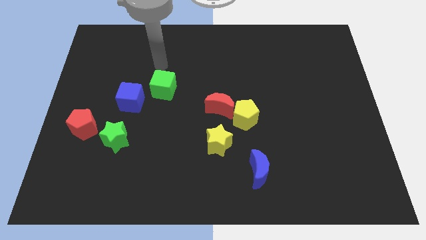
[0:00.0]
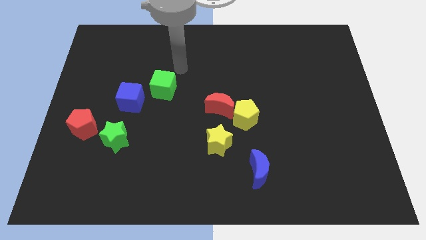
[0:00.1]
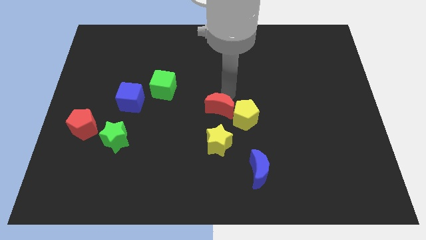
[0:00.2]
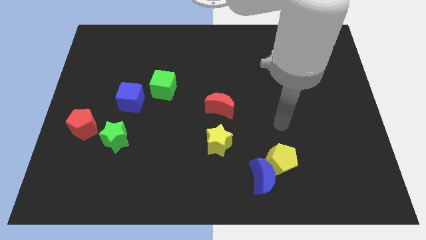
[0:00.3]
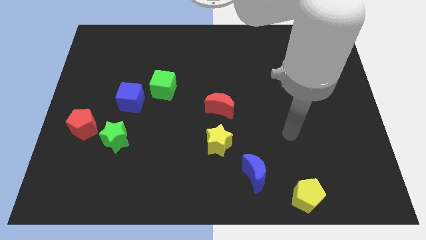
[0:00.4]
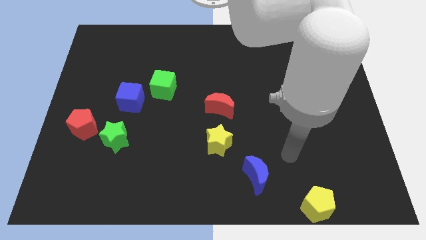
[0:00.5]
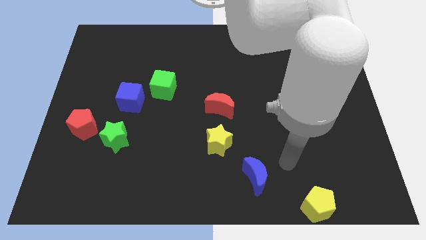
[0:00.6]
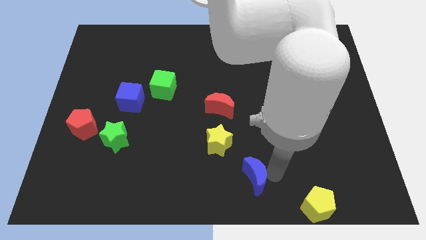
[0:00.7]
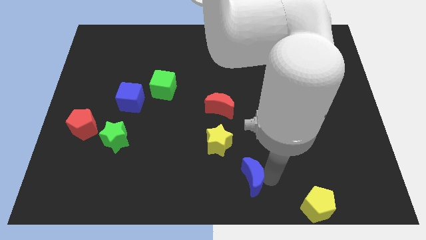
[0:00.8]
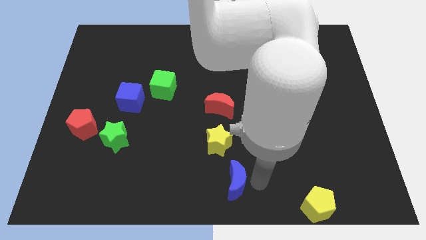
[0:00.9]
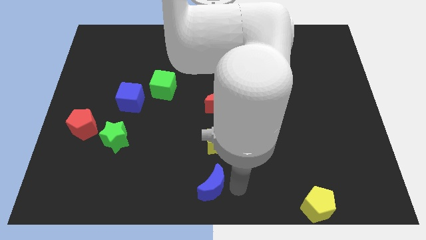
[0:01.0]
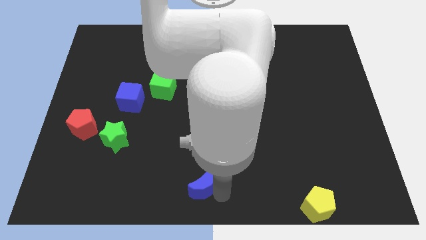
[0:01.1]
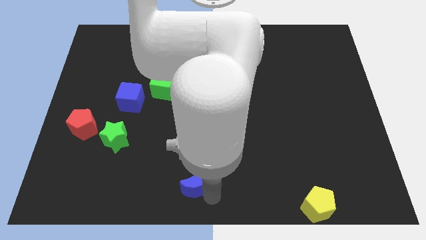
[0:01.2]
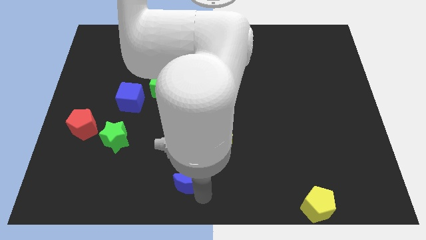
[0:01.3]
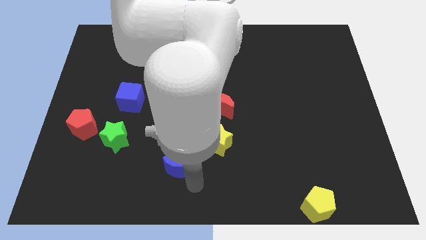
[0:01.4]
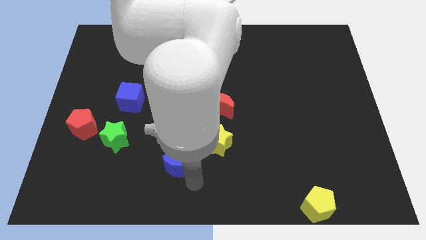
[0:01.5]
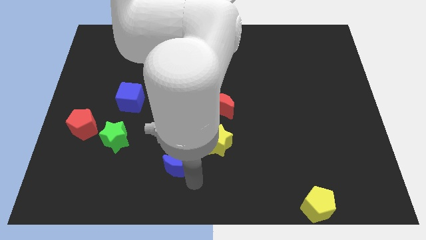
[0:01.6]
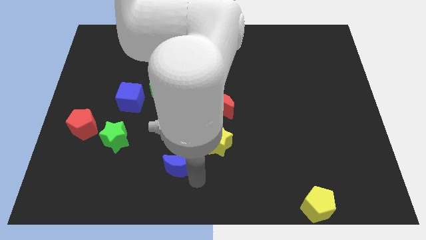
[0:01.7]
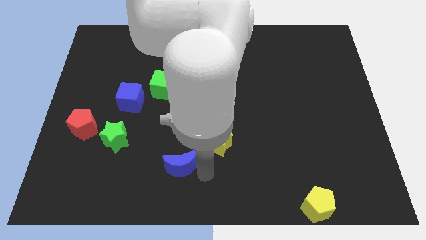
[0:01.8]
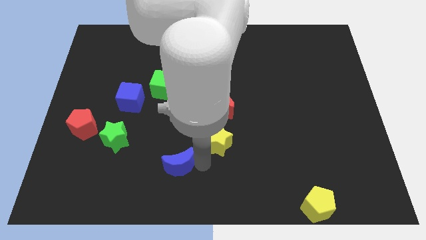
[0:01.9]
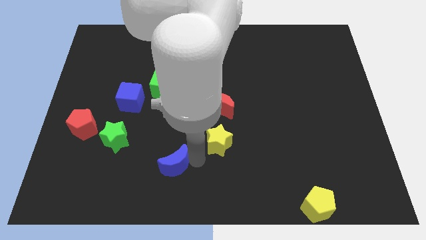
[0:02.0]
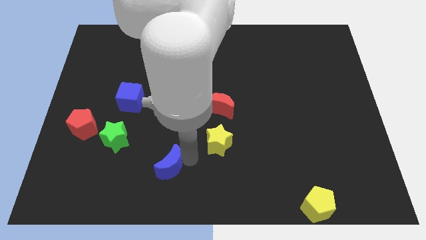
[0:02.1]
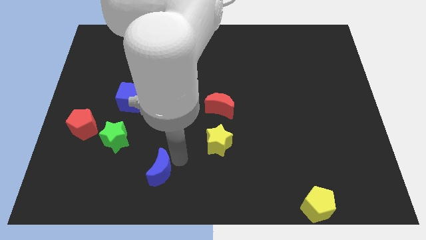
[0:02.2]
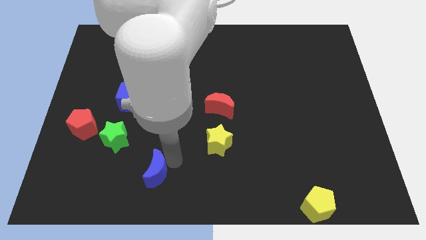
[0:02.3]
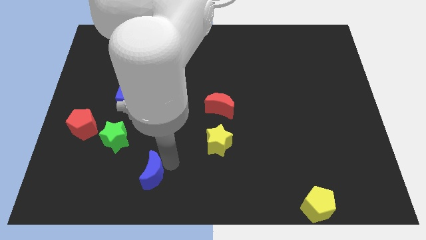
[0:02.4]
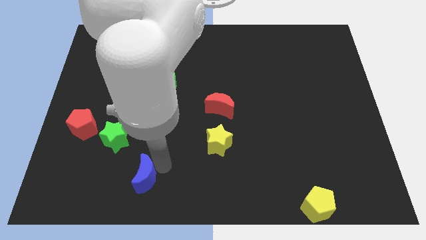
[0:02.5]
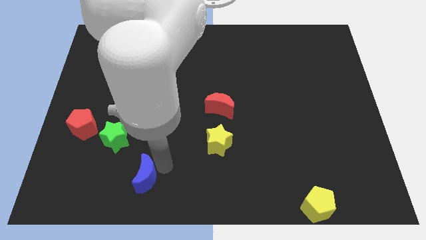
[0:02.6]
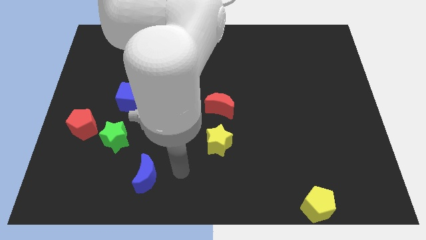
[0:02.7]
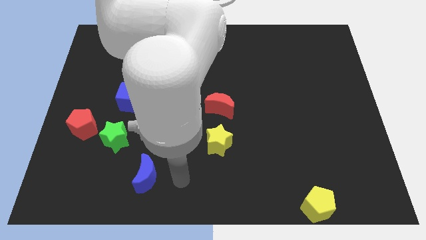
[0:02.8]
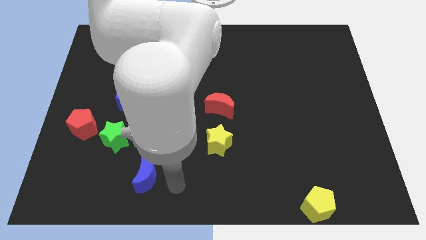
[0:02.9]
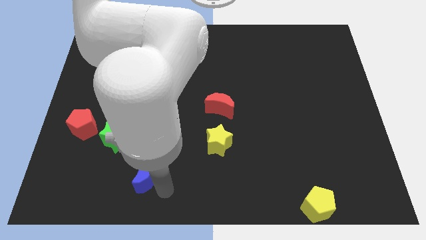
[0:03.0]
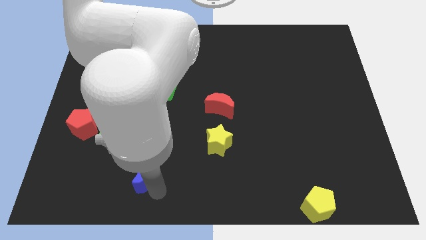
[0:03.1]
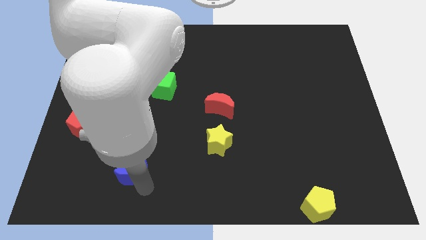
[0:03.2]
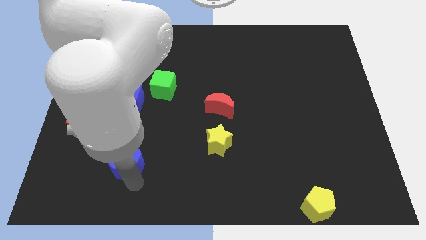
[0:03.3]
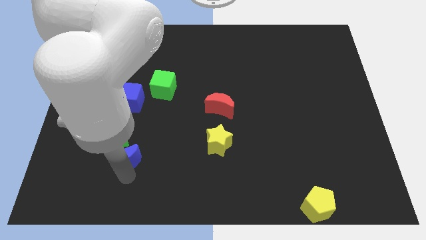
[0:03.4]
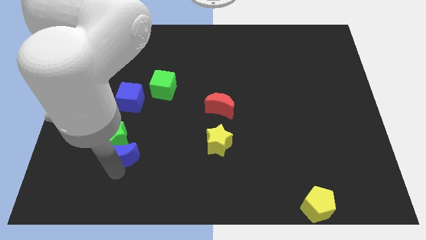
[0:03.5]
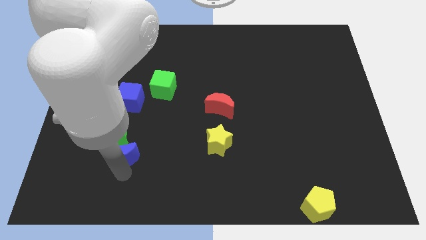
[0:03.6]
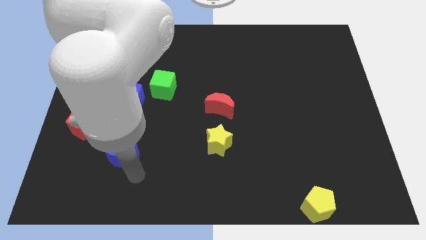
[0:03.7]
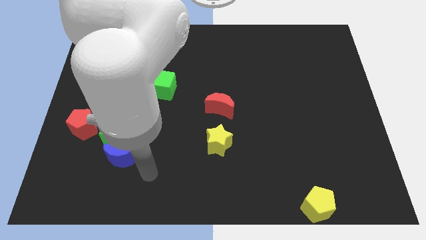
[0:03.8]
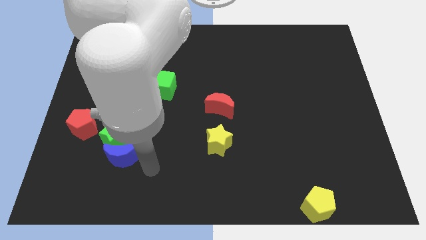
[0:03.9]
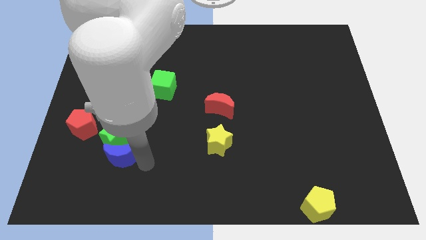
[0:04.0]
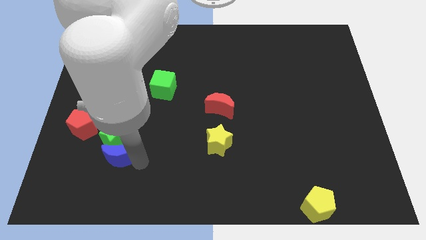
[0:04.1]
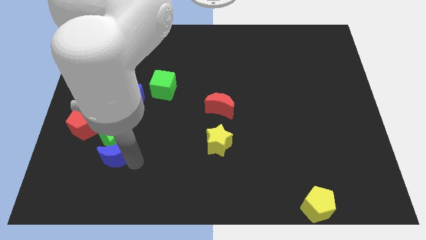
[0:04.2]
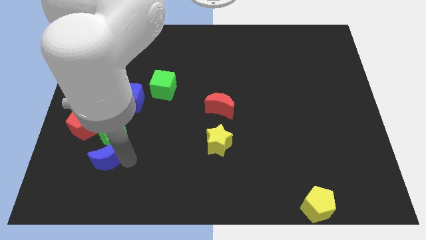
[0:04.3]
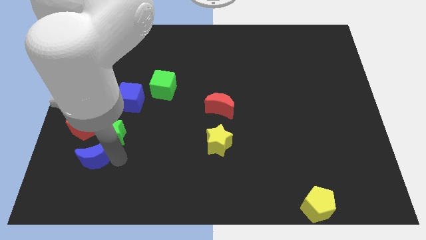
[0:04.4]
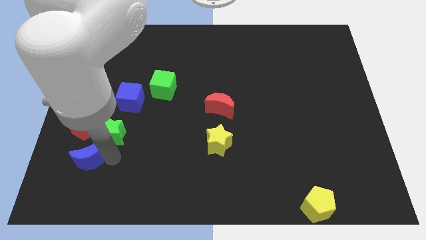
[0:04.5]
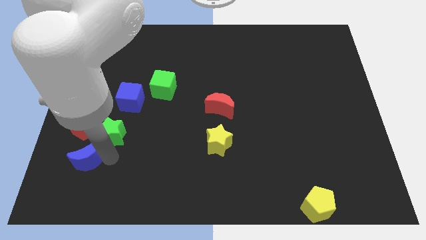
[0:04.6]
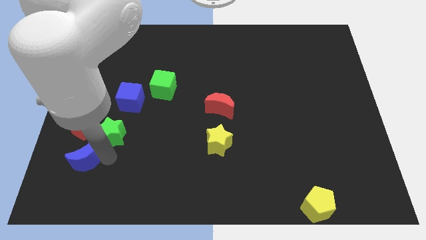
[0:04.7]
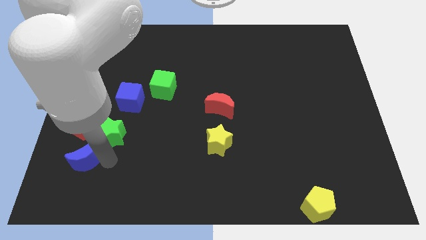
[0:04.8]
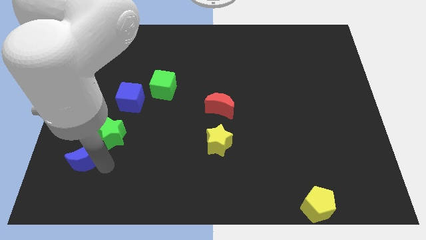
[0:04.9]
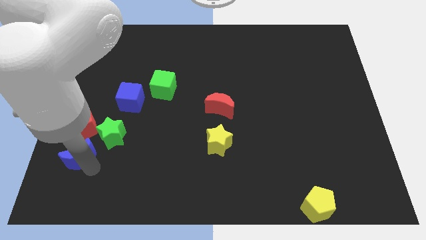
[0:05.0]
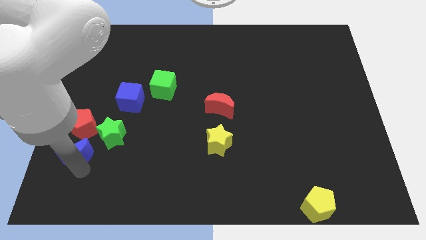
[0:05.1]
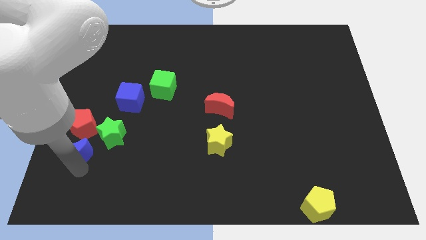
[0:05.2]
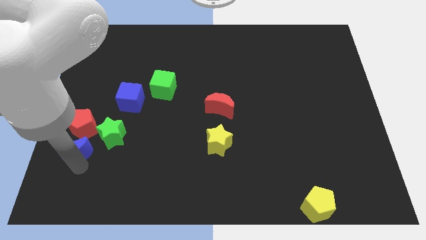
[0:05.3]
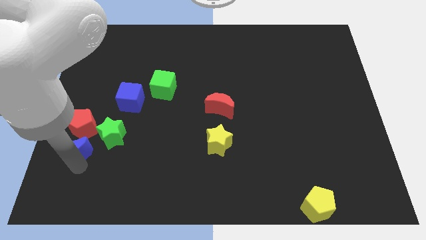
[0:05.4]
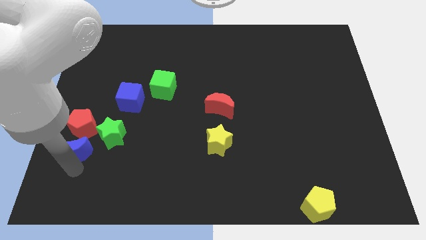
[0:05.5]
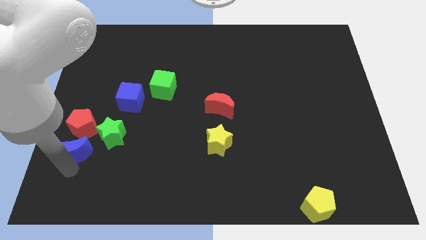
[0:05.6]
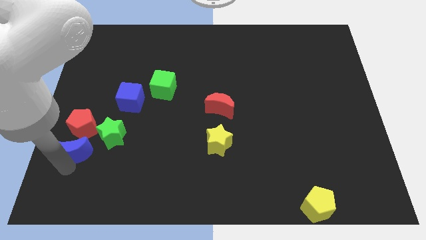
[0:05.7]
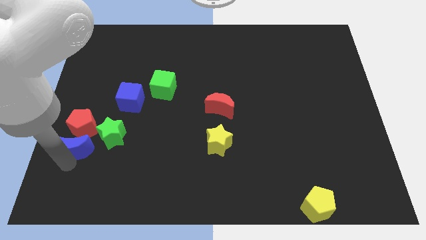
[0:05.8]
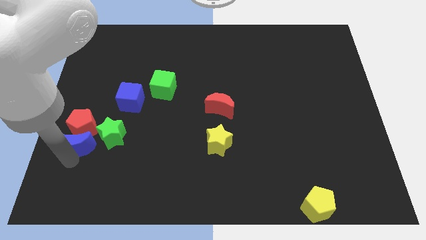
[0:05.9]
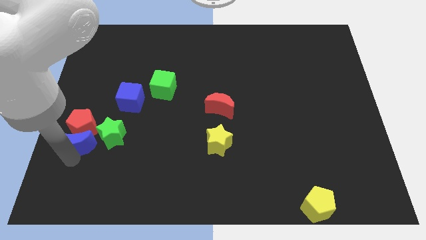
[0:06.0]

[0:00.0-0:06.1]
put the blue moon to the red pentagon

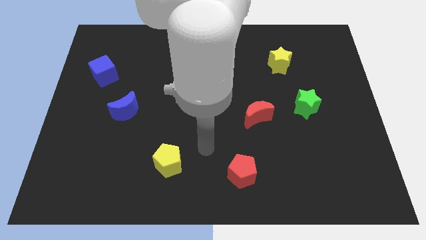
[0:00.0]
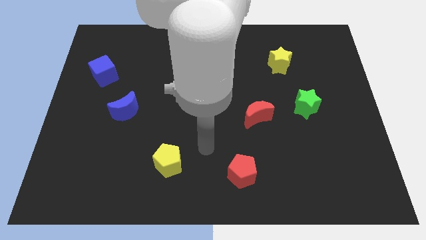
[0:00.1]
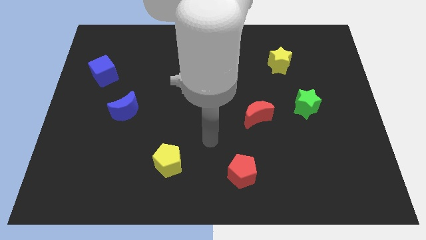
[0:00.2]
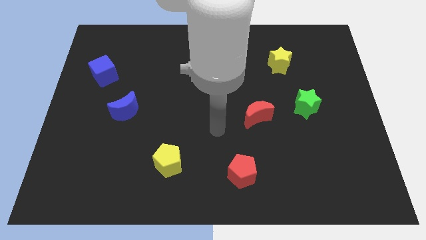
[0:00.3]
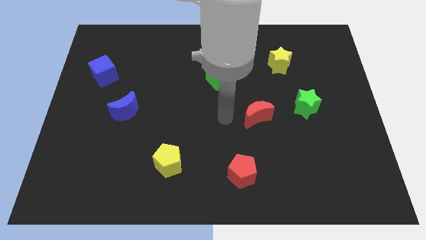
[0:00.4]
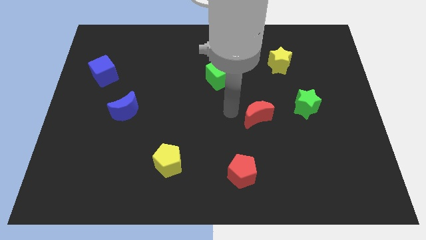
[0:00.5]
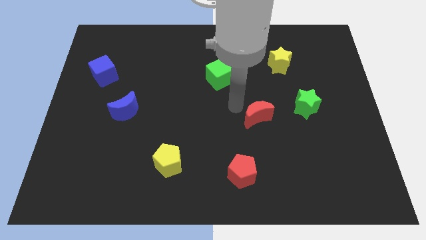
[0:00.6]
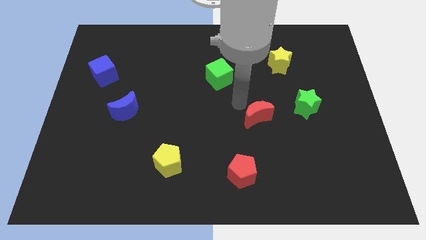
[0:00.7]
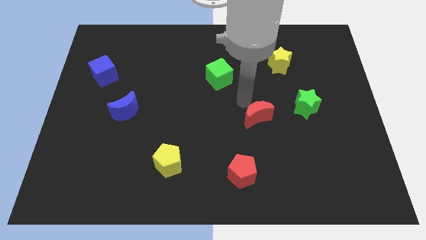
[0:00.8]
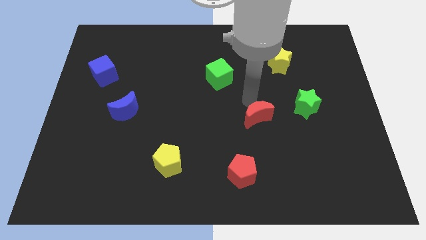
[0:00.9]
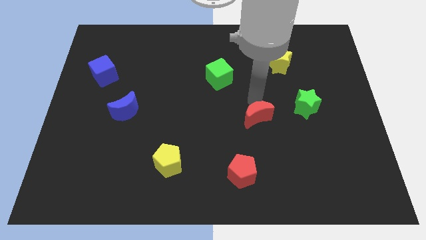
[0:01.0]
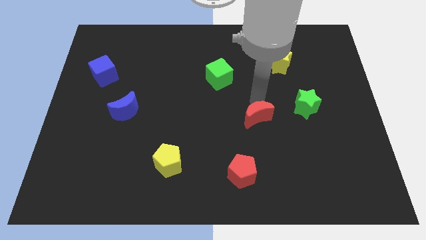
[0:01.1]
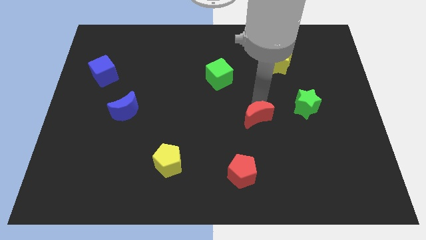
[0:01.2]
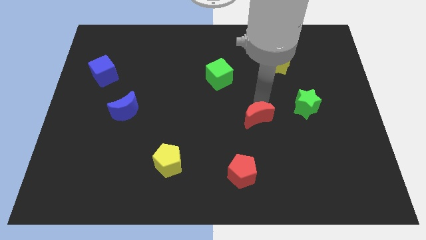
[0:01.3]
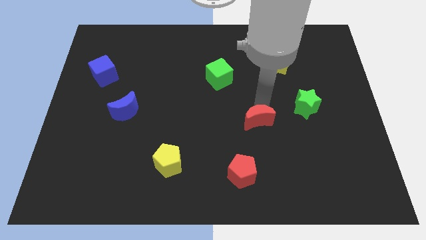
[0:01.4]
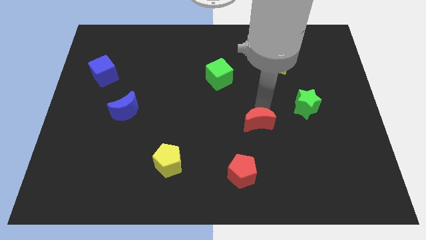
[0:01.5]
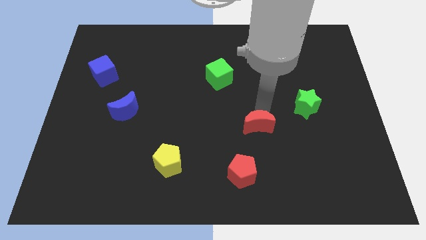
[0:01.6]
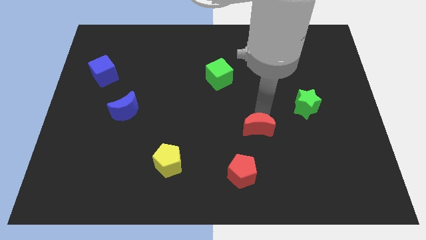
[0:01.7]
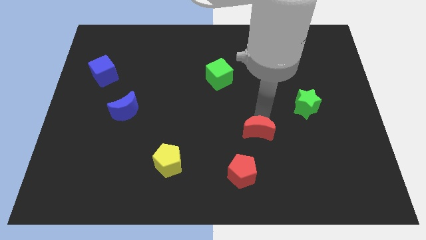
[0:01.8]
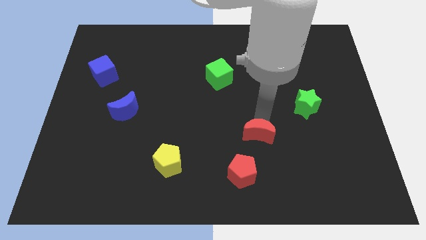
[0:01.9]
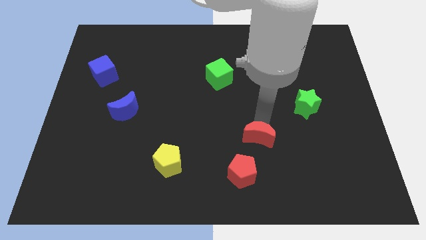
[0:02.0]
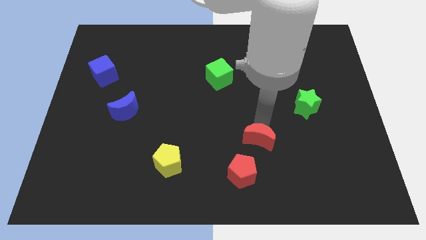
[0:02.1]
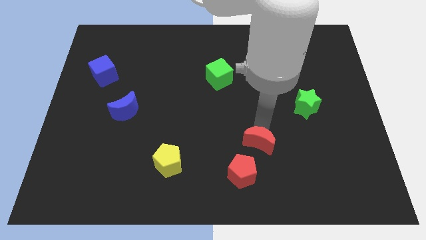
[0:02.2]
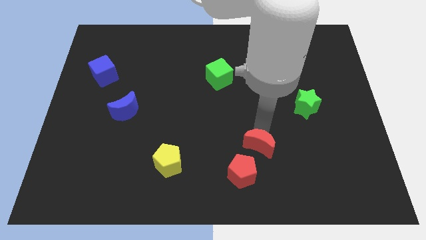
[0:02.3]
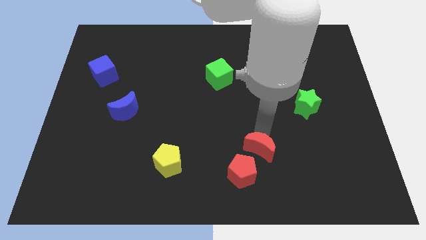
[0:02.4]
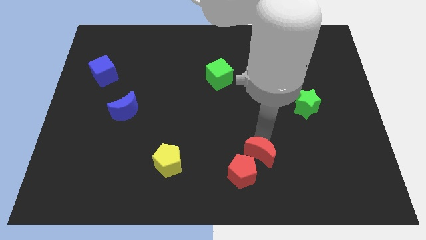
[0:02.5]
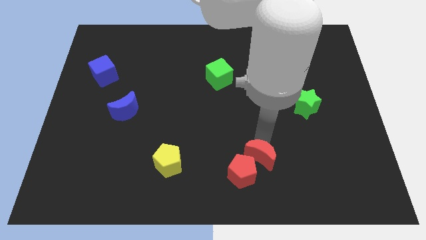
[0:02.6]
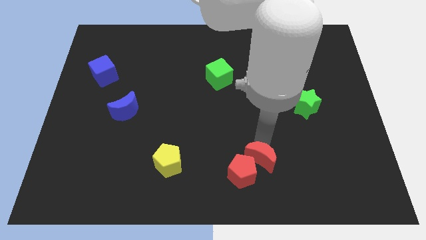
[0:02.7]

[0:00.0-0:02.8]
move the red moon to the red pentagon
